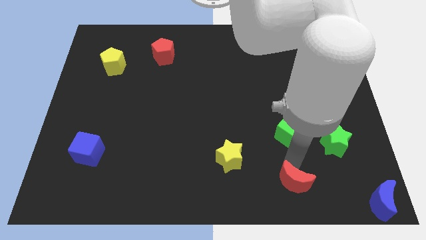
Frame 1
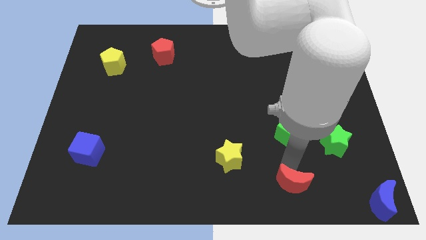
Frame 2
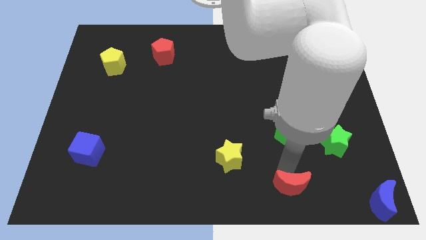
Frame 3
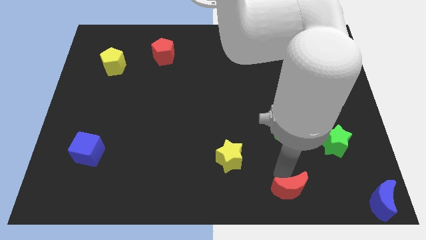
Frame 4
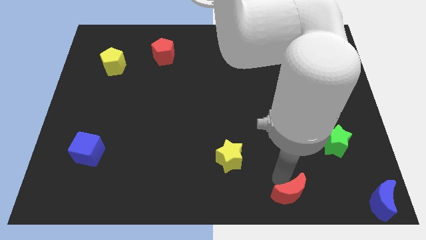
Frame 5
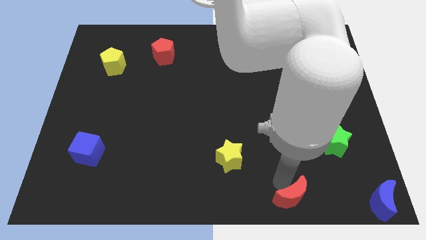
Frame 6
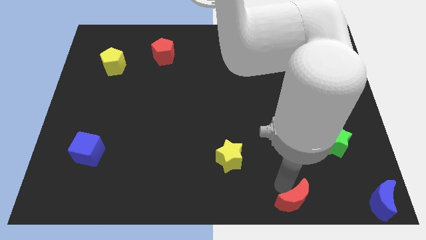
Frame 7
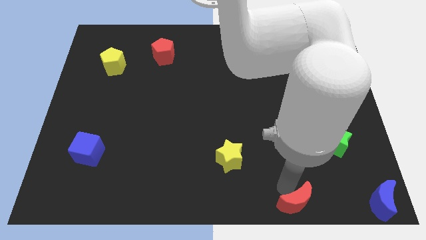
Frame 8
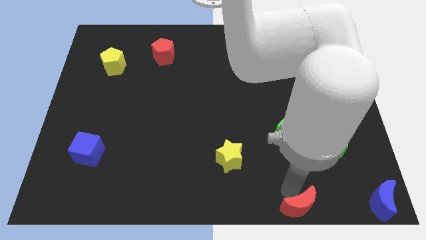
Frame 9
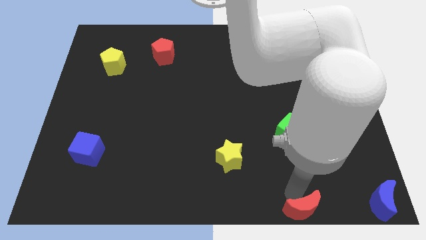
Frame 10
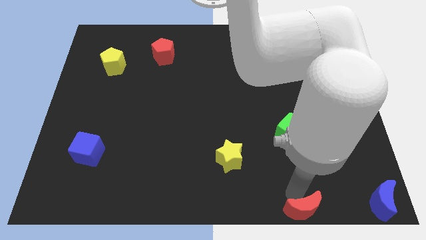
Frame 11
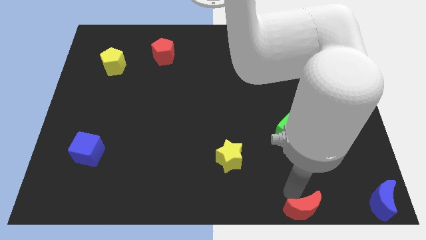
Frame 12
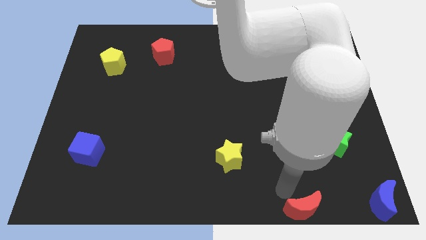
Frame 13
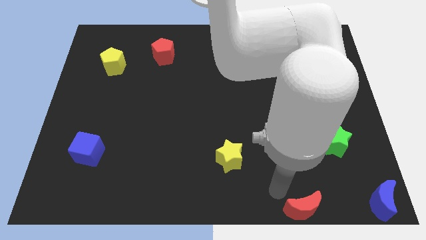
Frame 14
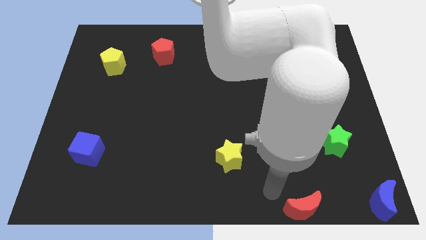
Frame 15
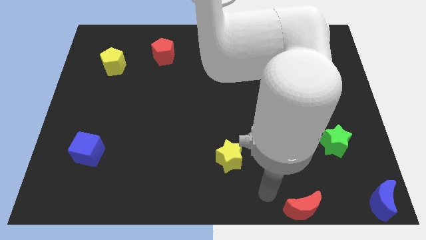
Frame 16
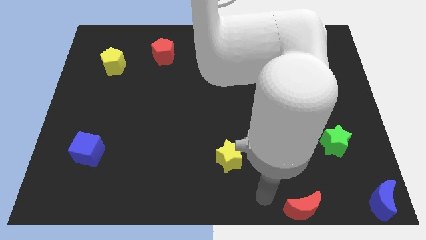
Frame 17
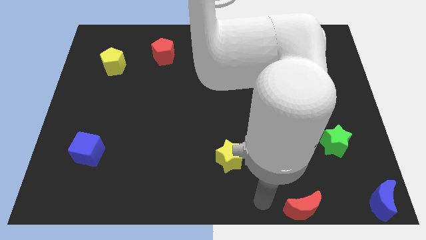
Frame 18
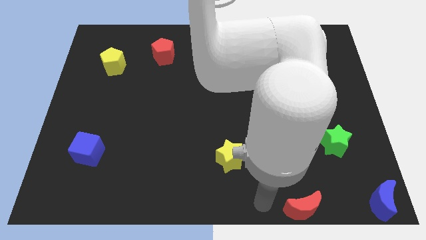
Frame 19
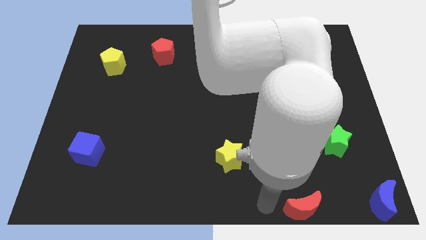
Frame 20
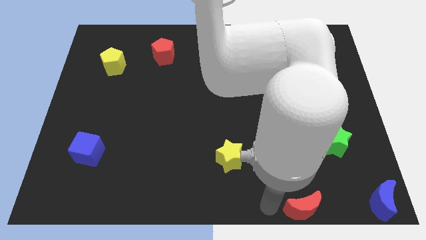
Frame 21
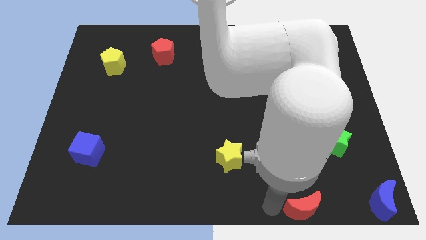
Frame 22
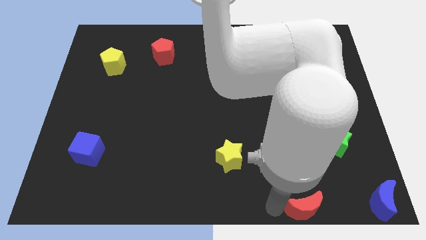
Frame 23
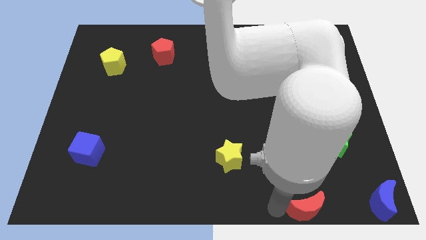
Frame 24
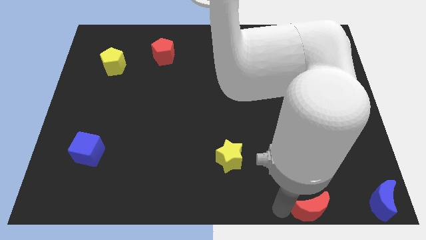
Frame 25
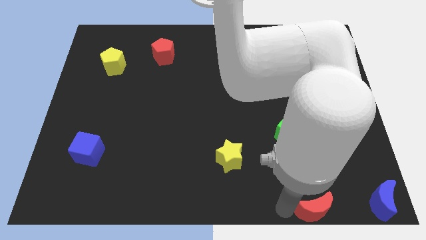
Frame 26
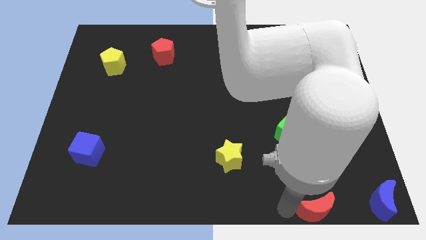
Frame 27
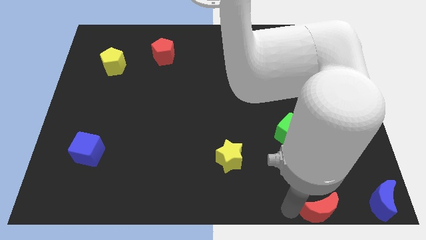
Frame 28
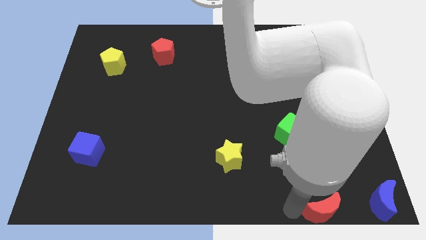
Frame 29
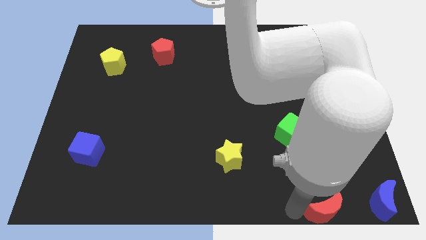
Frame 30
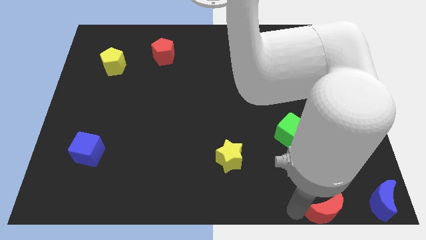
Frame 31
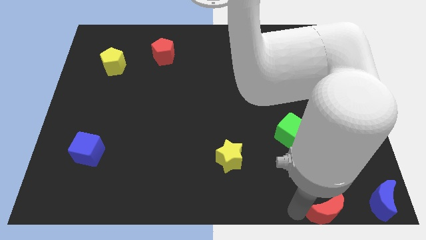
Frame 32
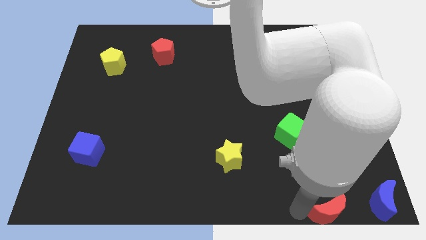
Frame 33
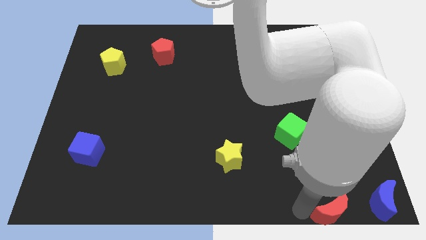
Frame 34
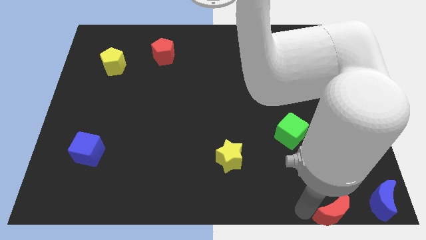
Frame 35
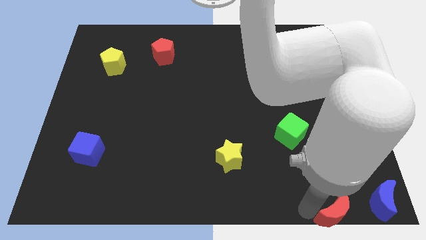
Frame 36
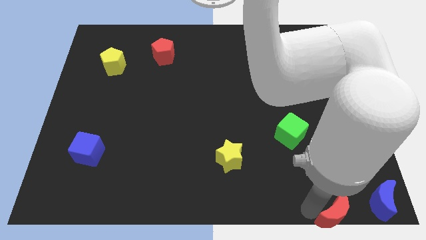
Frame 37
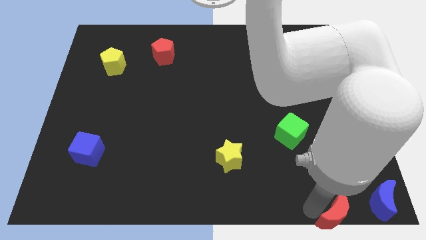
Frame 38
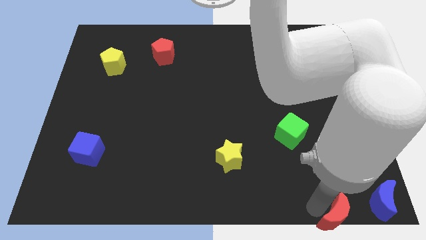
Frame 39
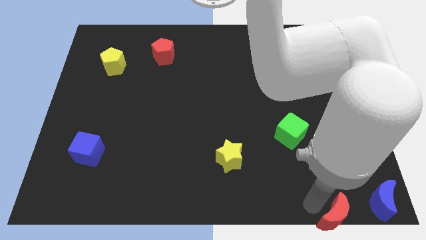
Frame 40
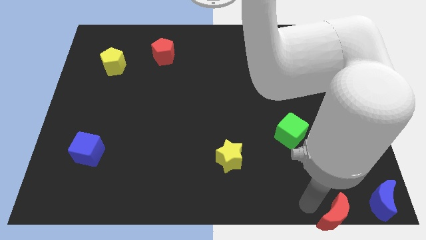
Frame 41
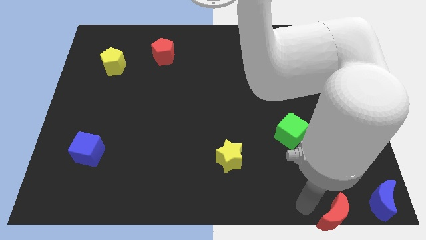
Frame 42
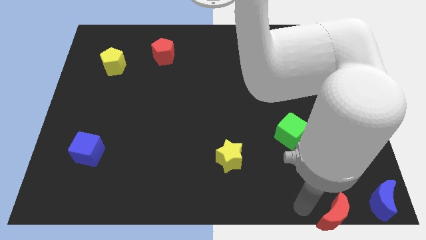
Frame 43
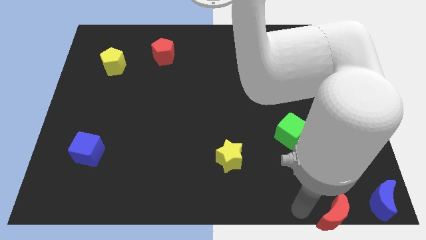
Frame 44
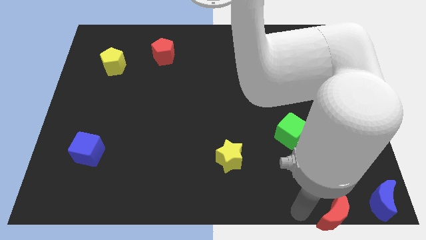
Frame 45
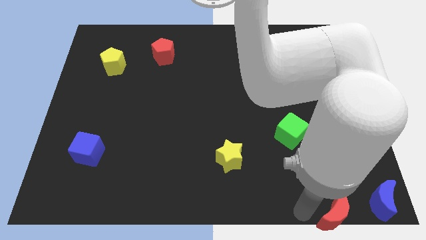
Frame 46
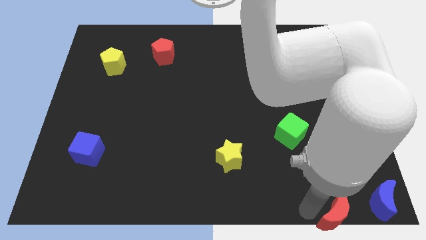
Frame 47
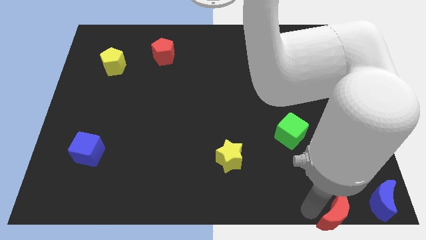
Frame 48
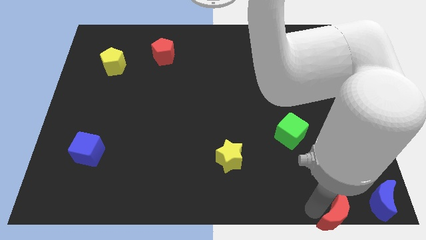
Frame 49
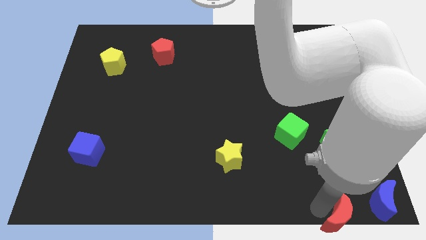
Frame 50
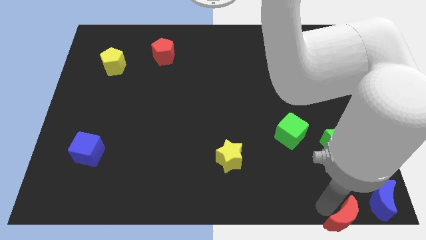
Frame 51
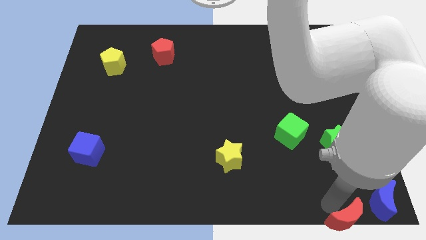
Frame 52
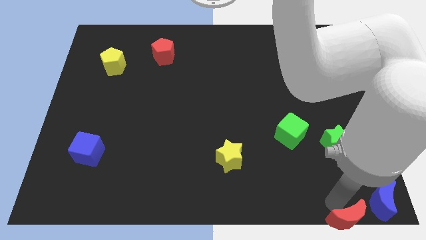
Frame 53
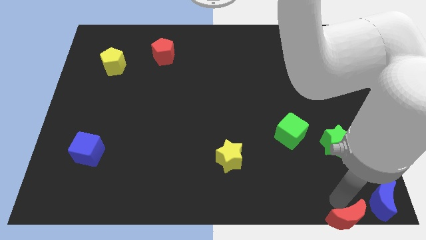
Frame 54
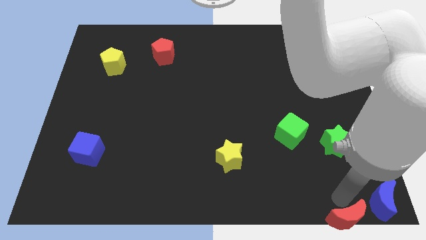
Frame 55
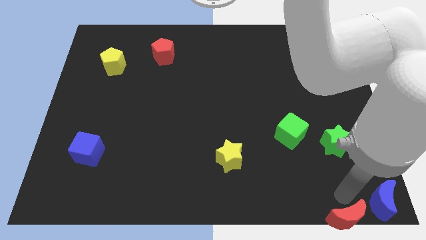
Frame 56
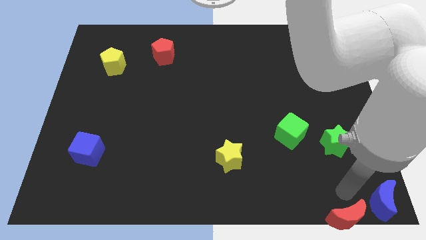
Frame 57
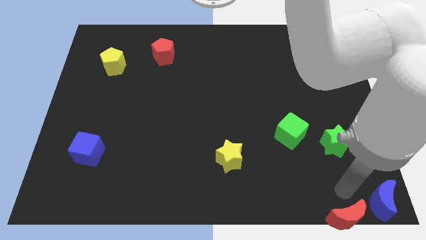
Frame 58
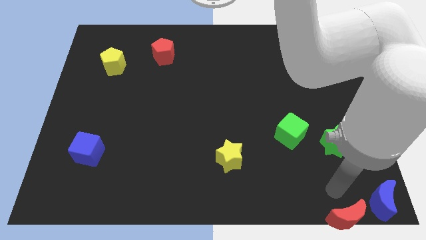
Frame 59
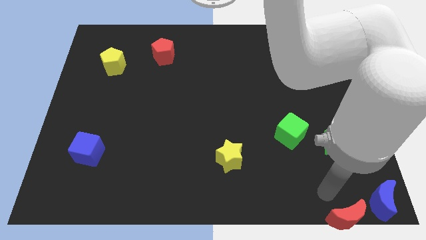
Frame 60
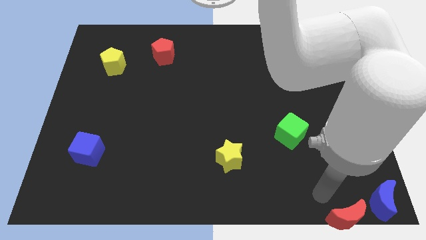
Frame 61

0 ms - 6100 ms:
place the red moon to the left of the blue moon

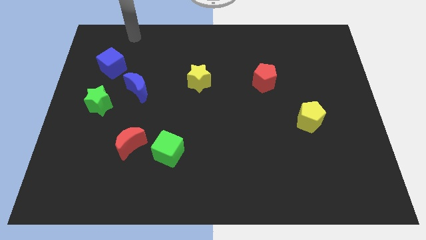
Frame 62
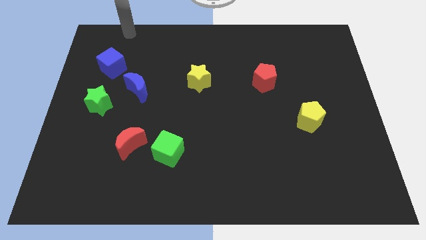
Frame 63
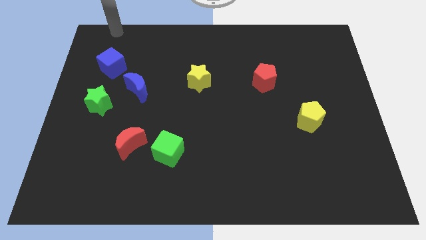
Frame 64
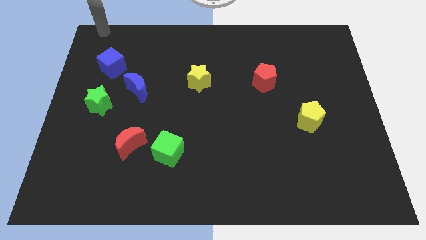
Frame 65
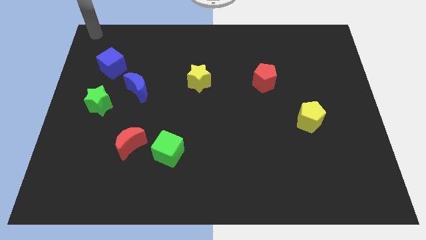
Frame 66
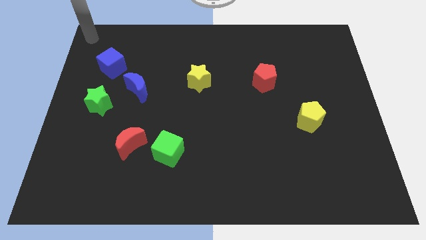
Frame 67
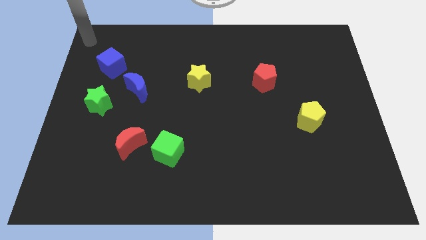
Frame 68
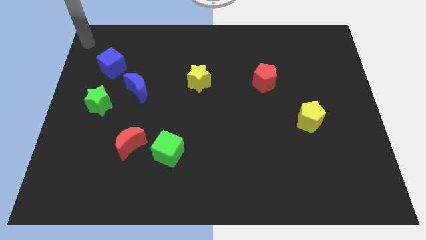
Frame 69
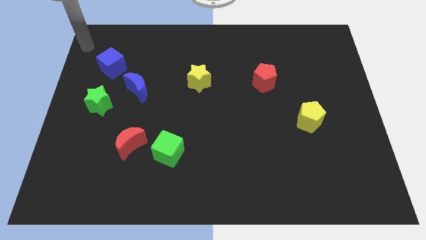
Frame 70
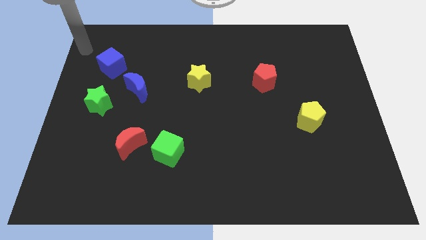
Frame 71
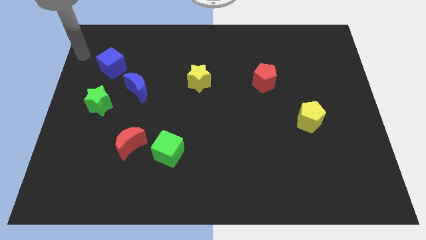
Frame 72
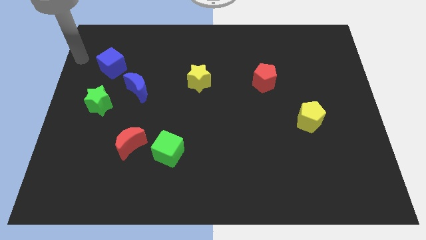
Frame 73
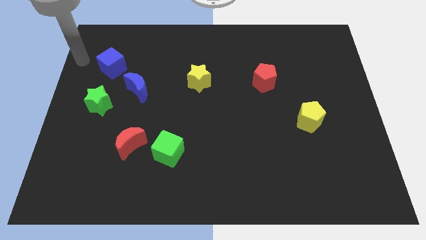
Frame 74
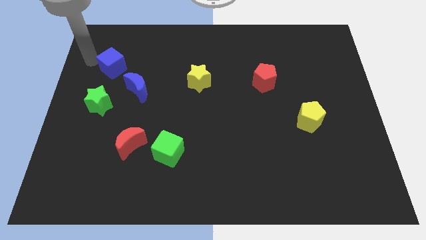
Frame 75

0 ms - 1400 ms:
point the arm to the left of the blue cube

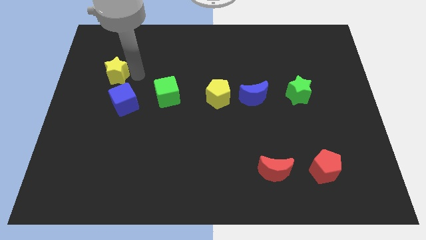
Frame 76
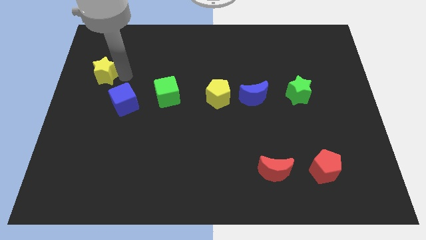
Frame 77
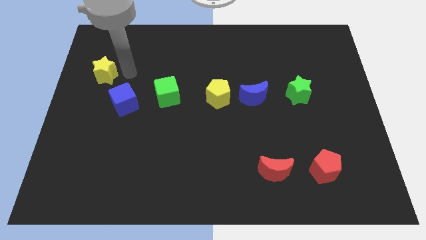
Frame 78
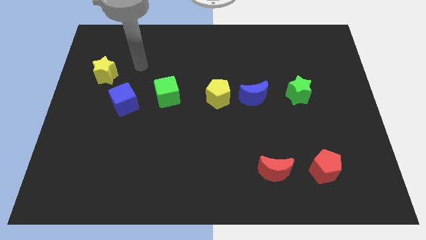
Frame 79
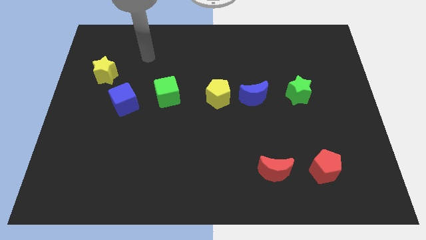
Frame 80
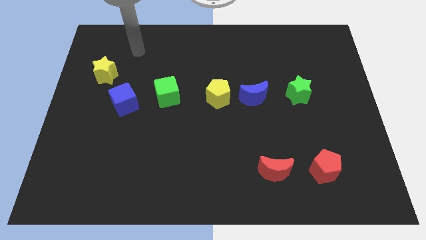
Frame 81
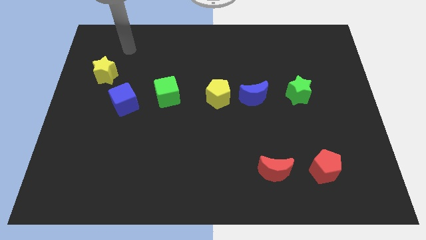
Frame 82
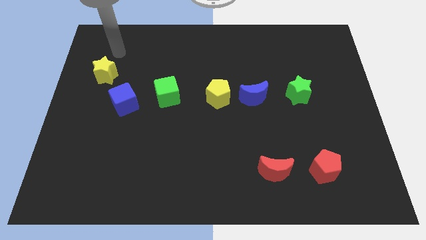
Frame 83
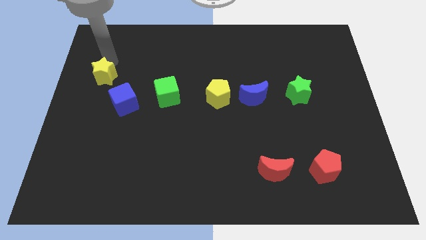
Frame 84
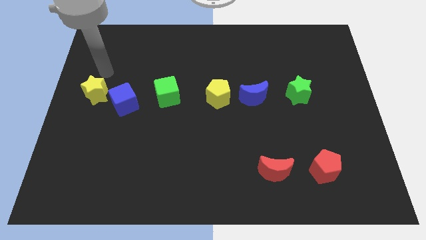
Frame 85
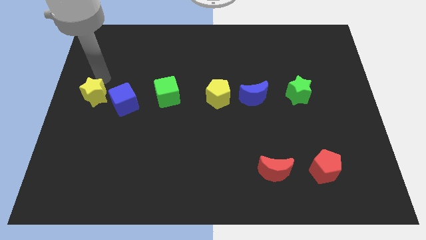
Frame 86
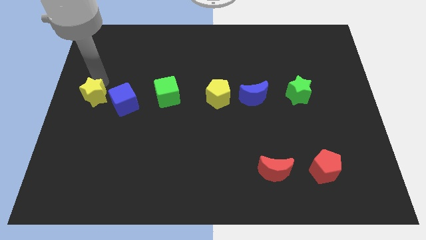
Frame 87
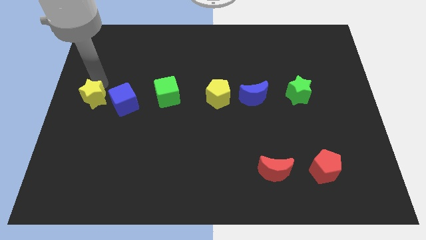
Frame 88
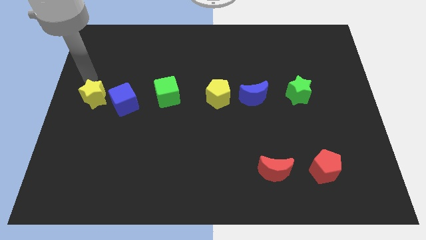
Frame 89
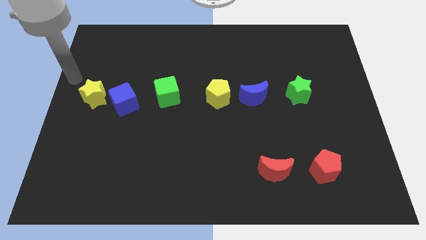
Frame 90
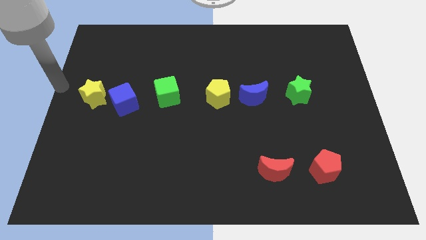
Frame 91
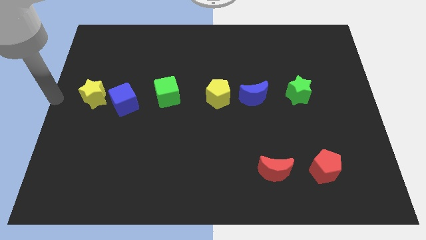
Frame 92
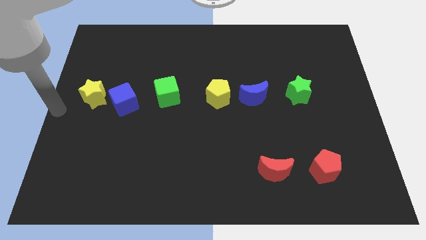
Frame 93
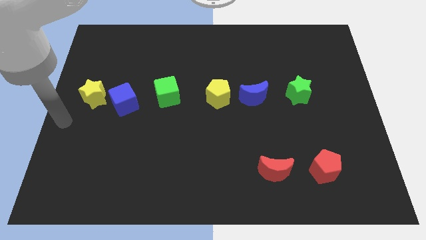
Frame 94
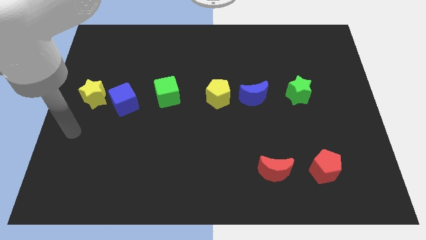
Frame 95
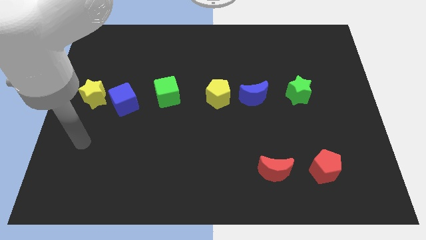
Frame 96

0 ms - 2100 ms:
slide yellow star down to the left of blue cube
